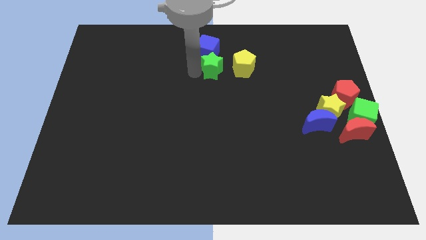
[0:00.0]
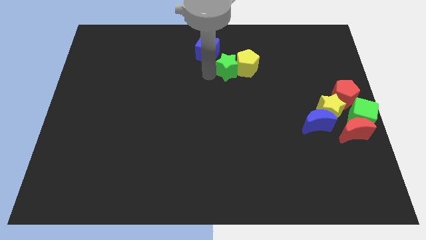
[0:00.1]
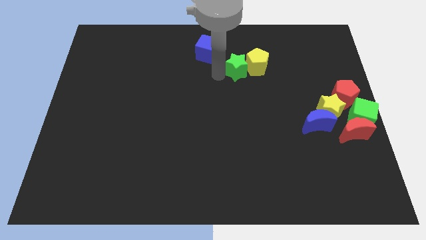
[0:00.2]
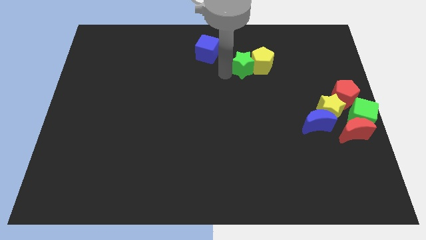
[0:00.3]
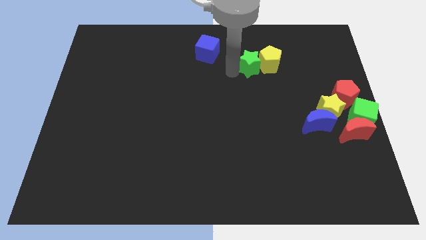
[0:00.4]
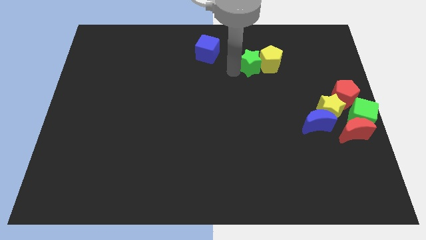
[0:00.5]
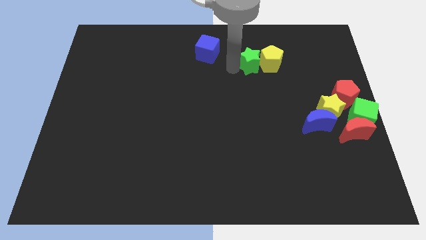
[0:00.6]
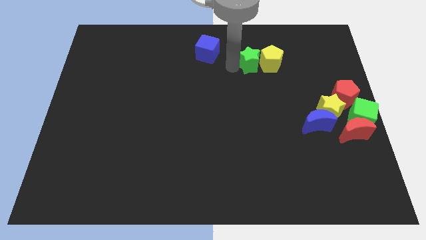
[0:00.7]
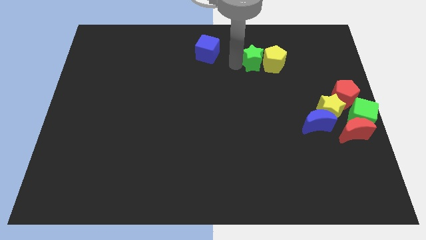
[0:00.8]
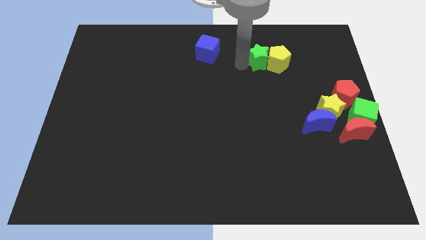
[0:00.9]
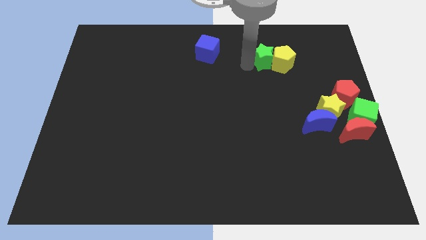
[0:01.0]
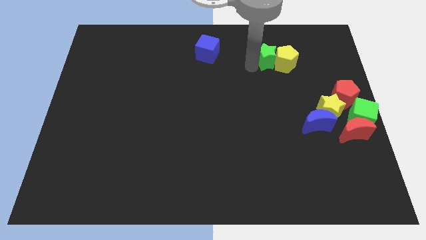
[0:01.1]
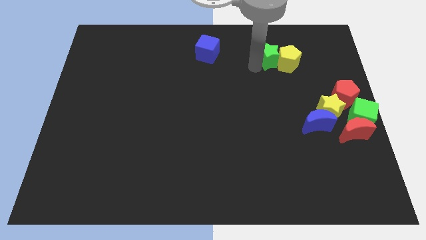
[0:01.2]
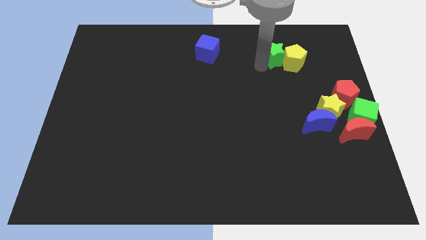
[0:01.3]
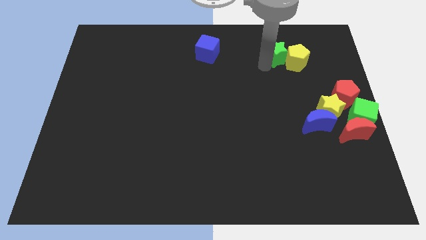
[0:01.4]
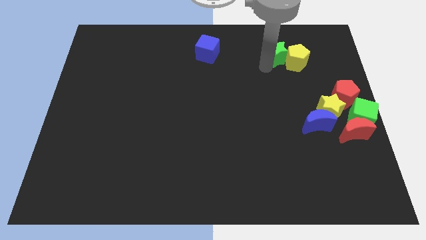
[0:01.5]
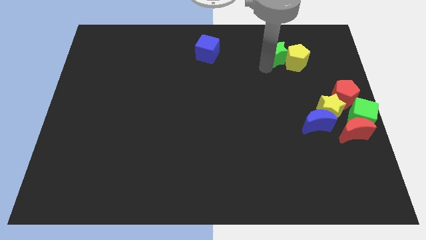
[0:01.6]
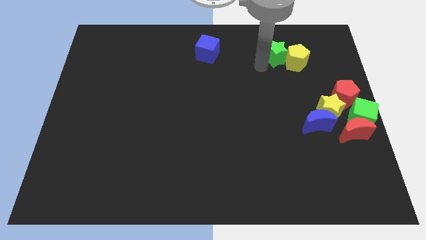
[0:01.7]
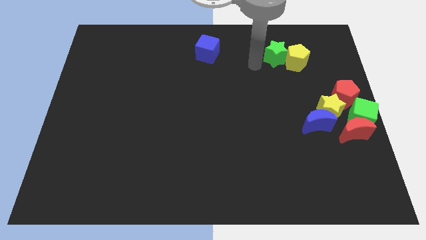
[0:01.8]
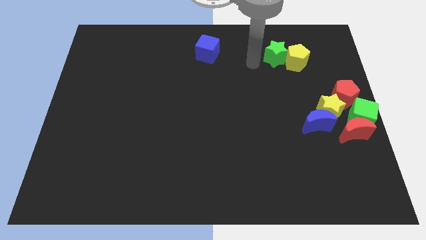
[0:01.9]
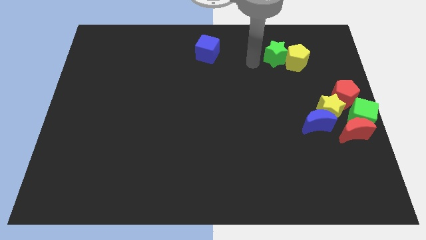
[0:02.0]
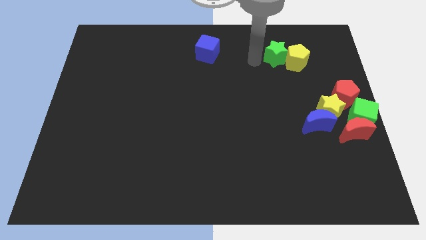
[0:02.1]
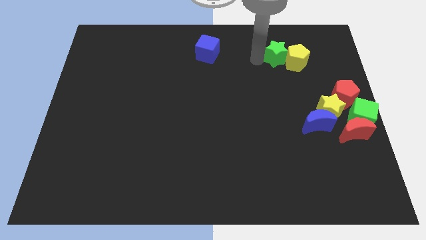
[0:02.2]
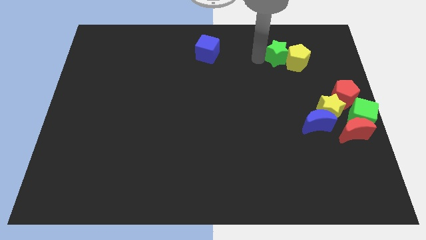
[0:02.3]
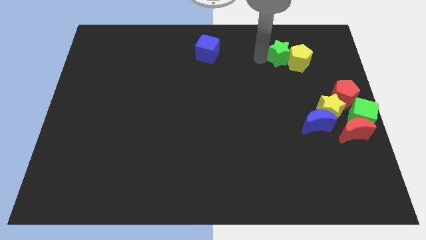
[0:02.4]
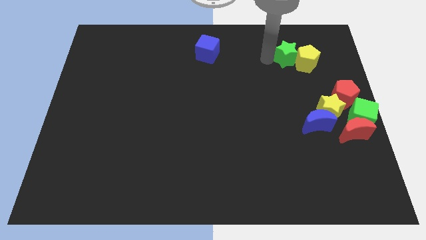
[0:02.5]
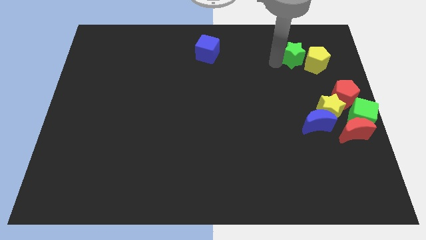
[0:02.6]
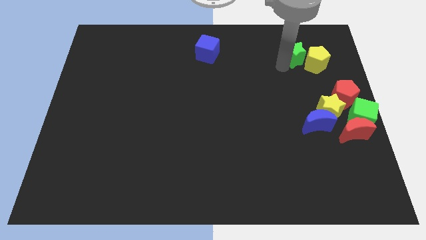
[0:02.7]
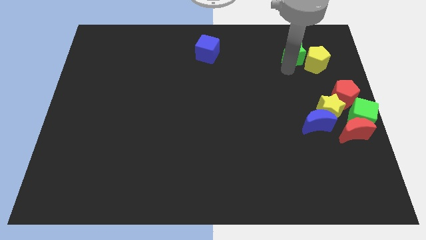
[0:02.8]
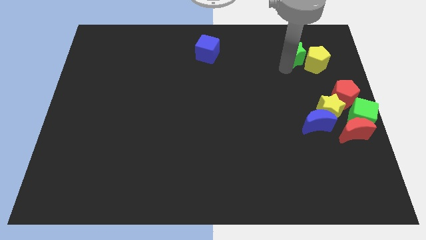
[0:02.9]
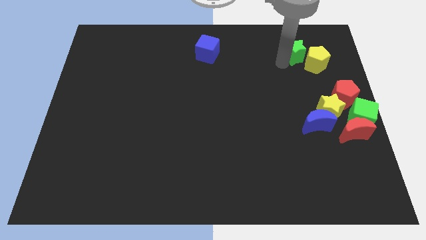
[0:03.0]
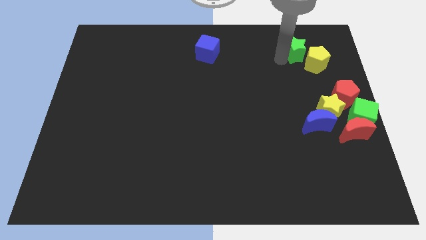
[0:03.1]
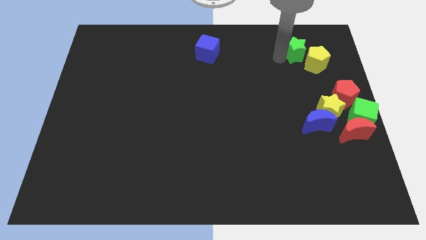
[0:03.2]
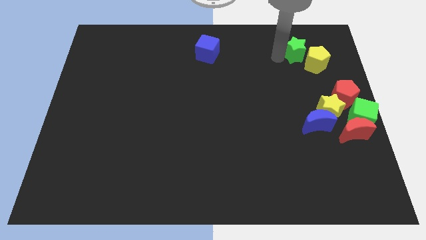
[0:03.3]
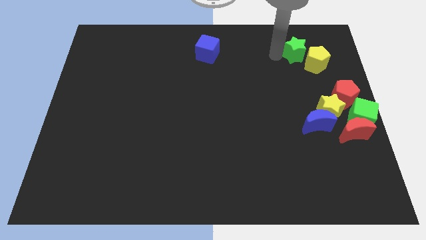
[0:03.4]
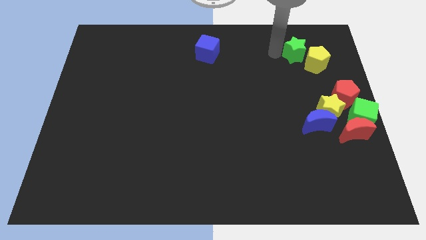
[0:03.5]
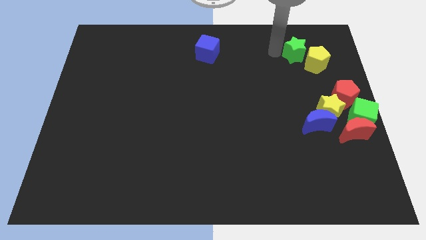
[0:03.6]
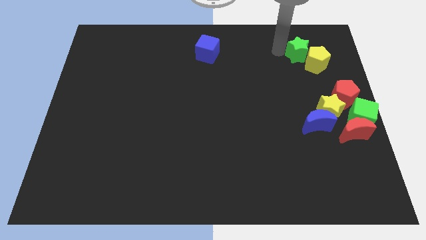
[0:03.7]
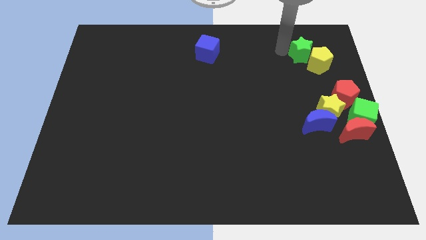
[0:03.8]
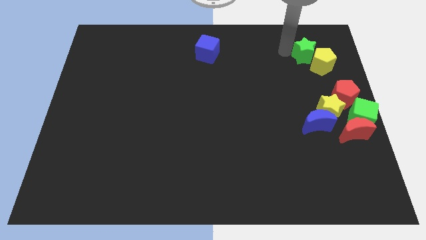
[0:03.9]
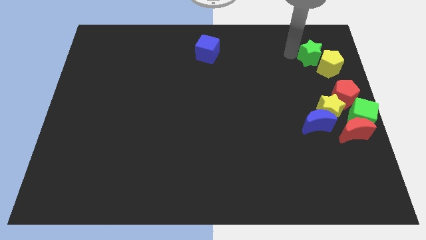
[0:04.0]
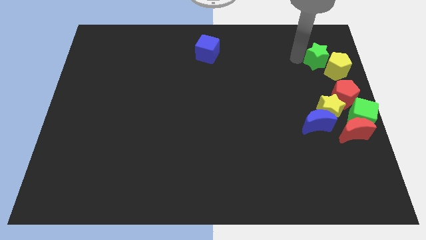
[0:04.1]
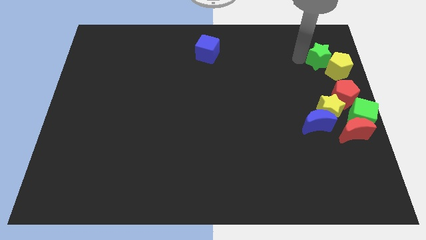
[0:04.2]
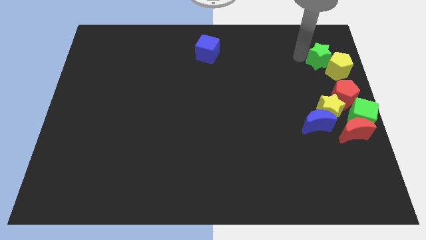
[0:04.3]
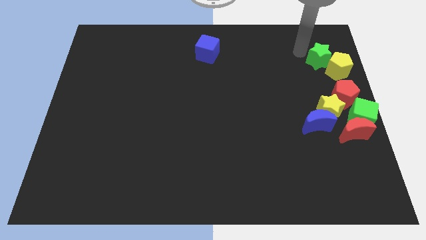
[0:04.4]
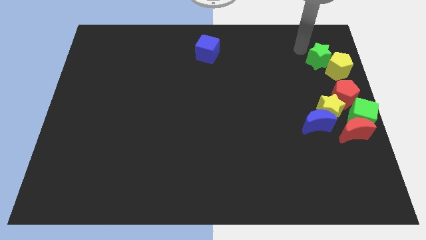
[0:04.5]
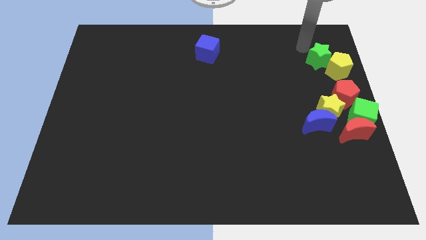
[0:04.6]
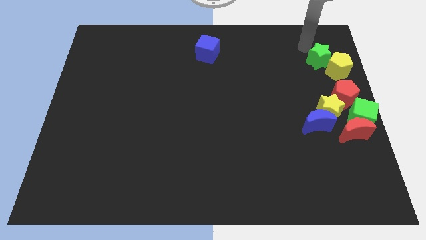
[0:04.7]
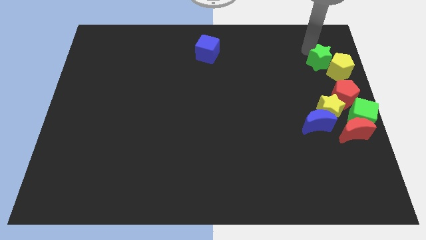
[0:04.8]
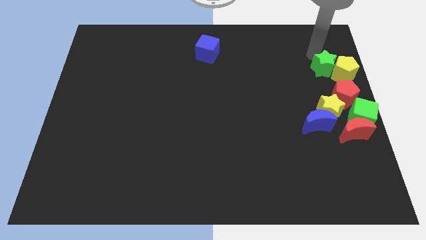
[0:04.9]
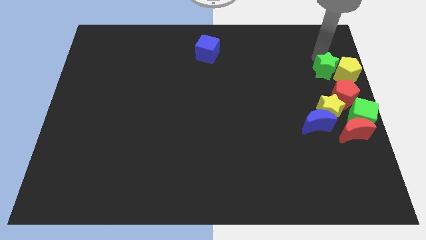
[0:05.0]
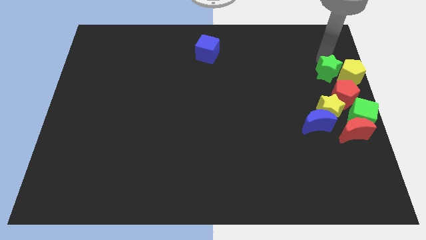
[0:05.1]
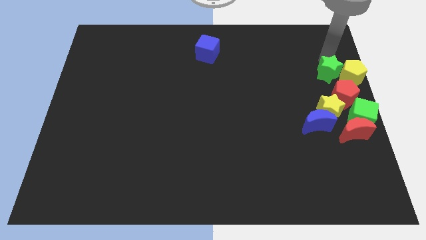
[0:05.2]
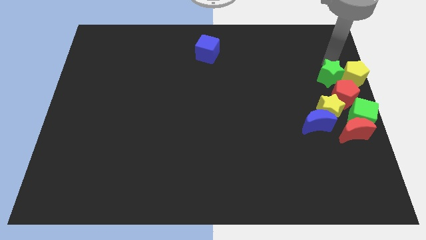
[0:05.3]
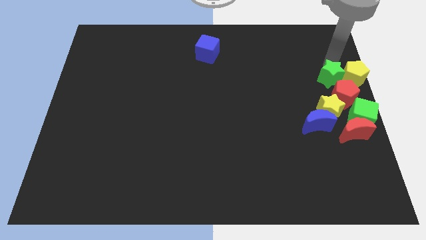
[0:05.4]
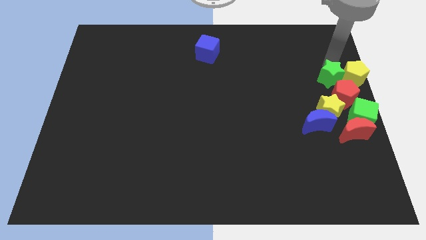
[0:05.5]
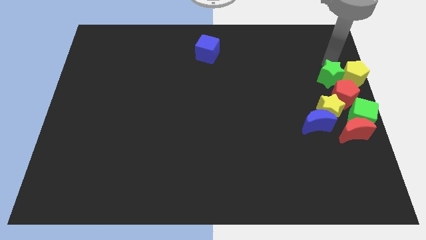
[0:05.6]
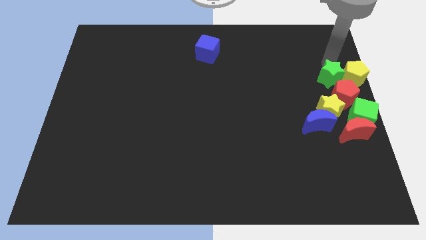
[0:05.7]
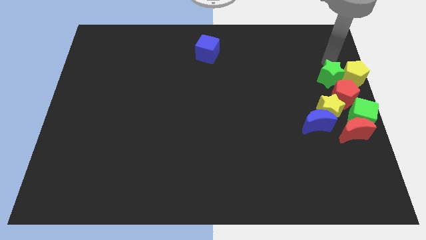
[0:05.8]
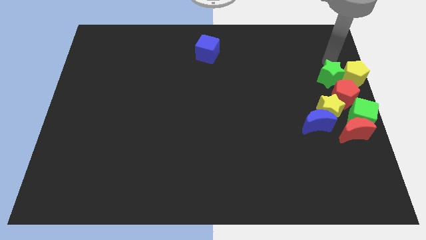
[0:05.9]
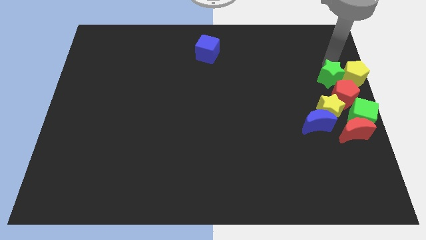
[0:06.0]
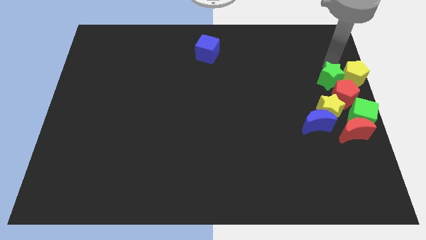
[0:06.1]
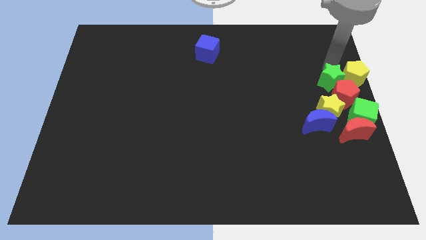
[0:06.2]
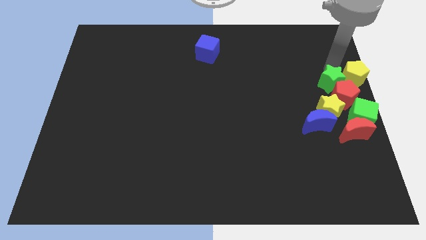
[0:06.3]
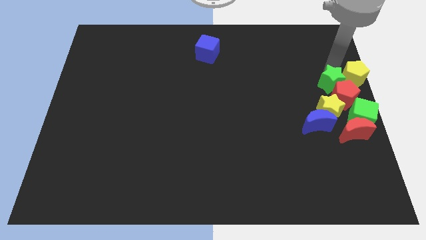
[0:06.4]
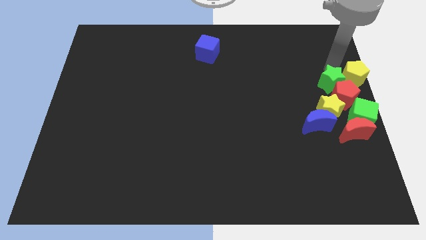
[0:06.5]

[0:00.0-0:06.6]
push the green star into the yellow pentagon towards right side of the board

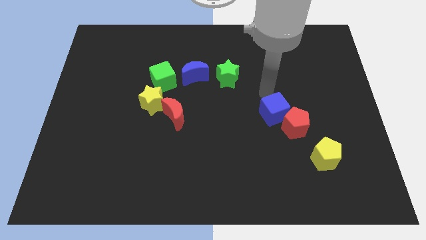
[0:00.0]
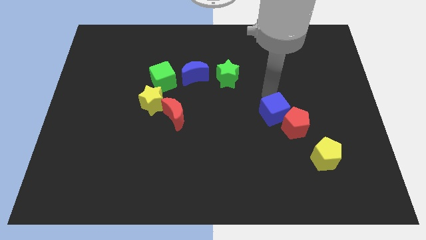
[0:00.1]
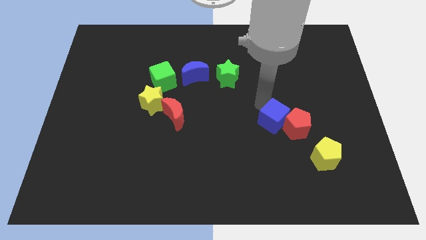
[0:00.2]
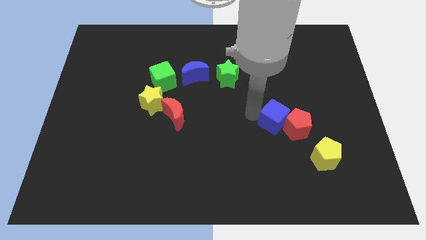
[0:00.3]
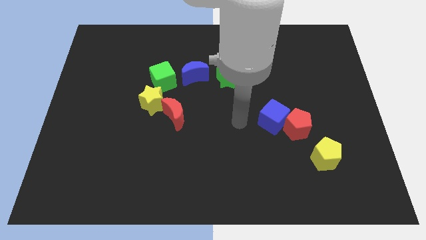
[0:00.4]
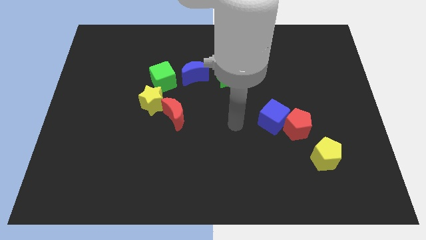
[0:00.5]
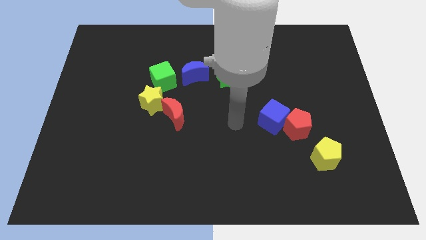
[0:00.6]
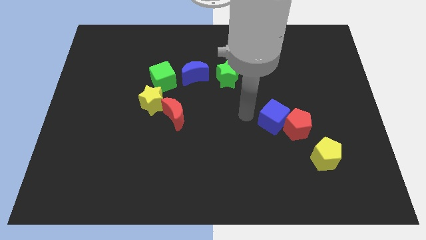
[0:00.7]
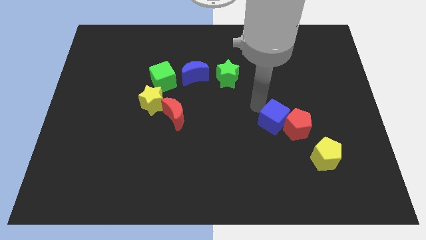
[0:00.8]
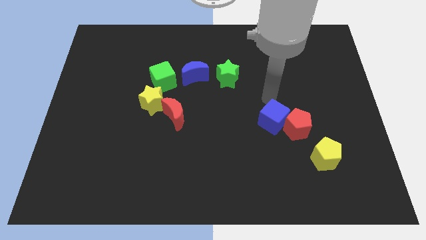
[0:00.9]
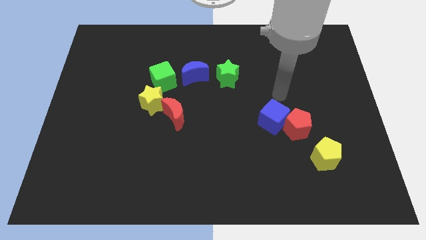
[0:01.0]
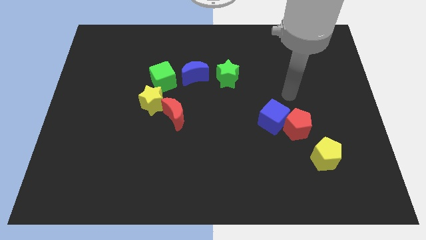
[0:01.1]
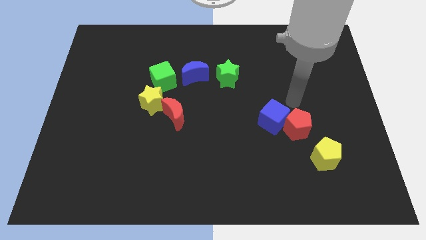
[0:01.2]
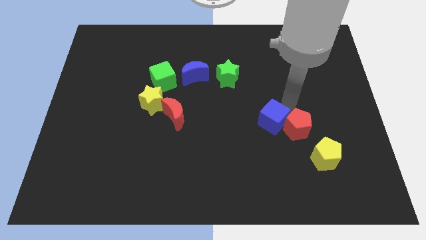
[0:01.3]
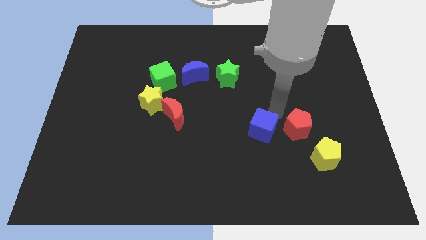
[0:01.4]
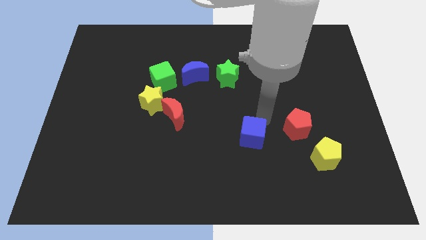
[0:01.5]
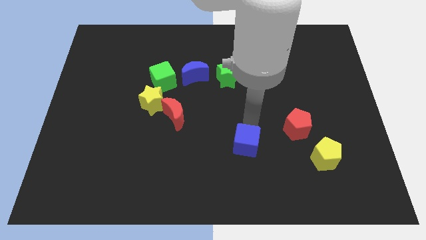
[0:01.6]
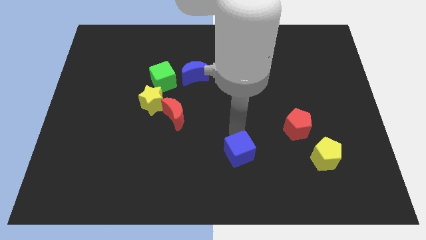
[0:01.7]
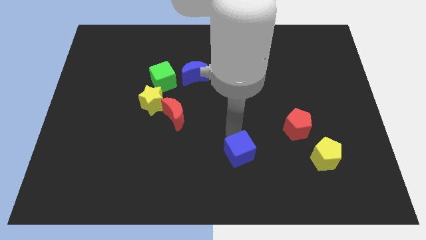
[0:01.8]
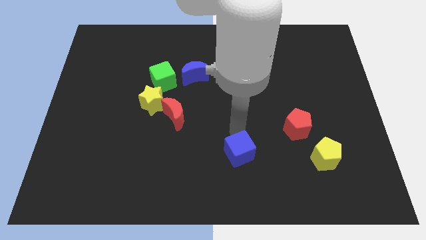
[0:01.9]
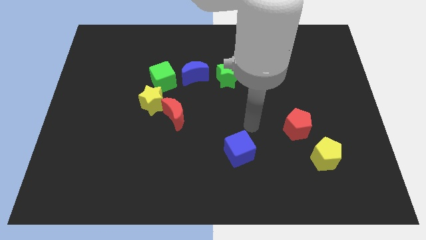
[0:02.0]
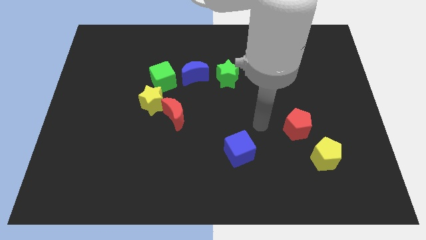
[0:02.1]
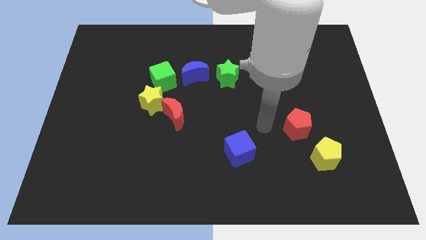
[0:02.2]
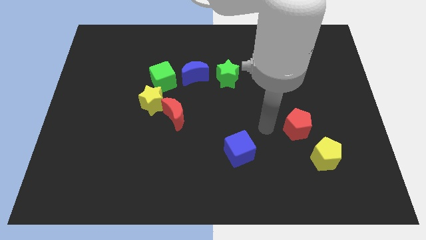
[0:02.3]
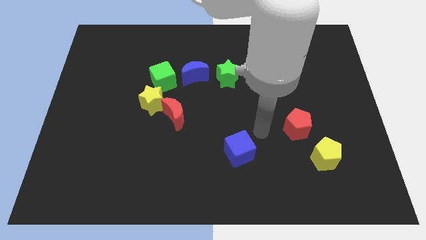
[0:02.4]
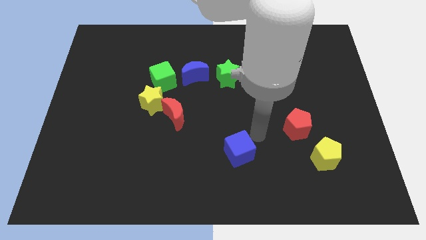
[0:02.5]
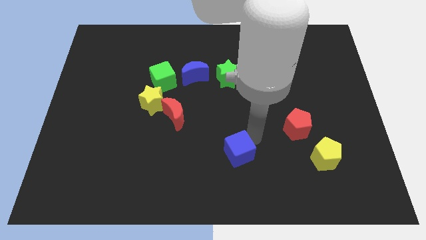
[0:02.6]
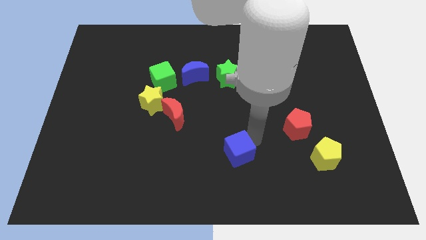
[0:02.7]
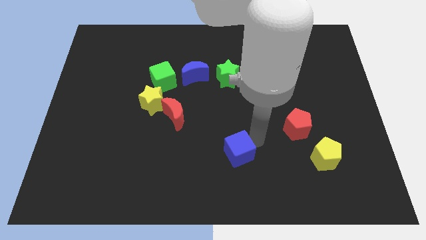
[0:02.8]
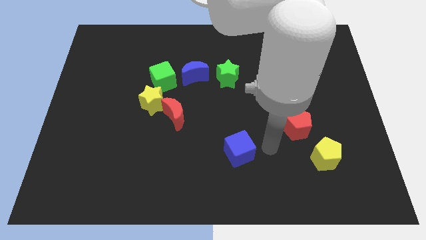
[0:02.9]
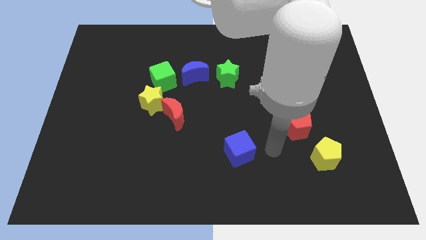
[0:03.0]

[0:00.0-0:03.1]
place the blue cube right to the red moon
